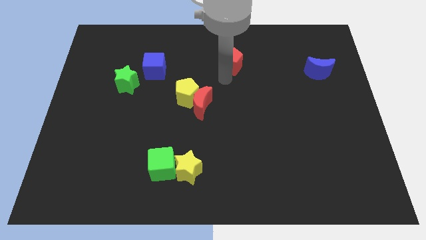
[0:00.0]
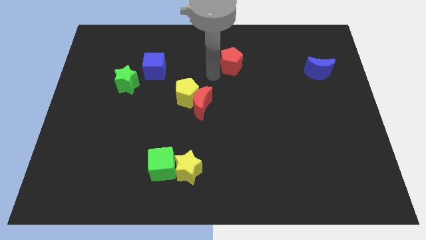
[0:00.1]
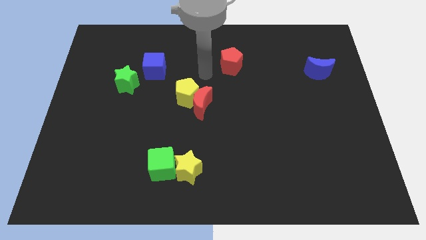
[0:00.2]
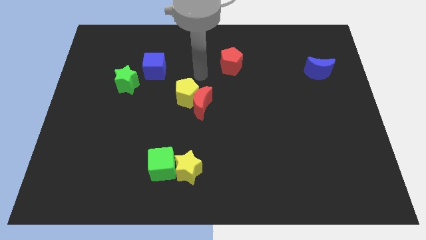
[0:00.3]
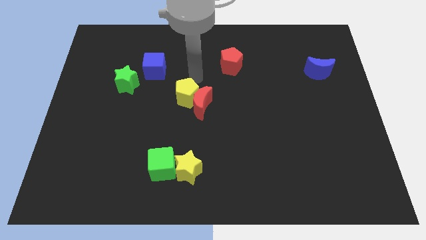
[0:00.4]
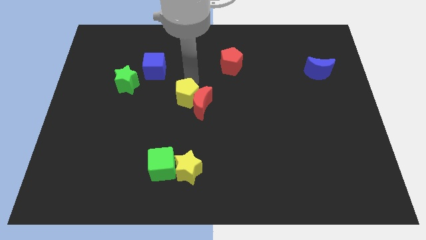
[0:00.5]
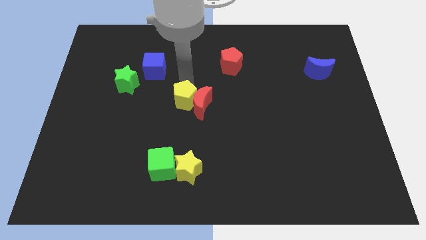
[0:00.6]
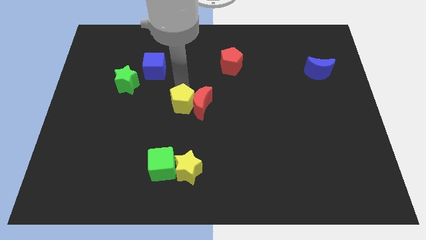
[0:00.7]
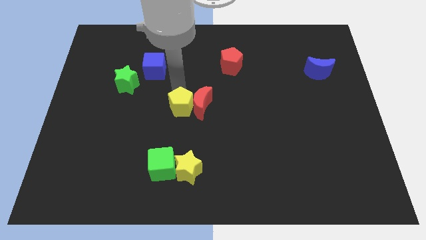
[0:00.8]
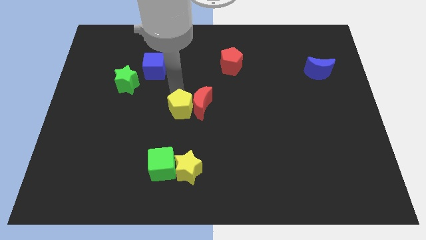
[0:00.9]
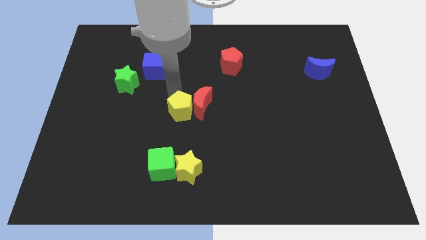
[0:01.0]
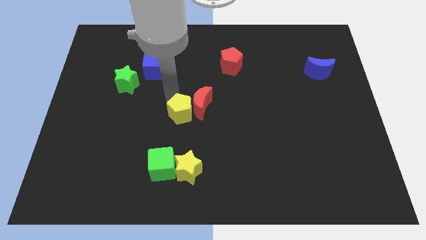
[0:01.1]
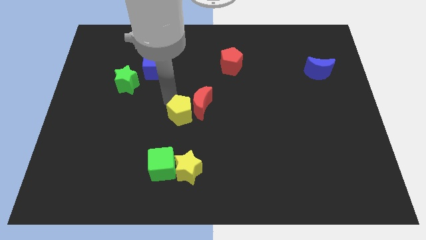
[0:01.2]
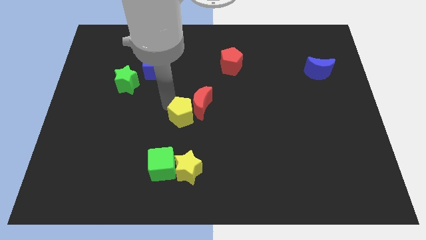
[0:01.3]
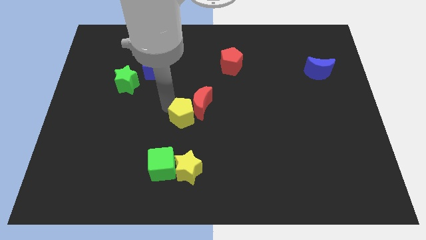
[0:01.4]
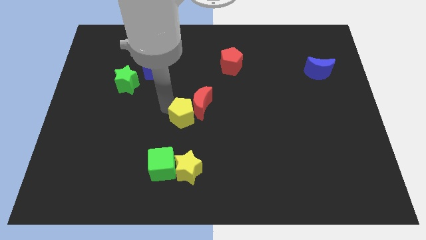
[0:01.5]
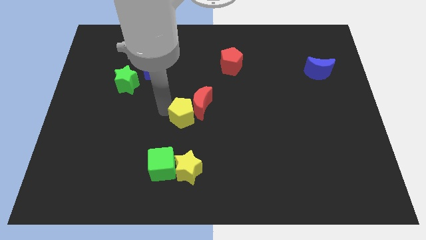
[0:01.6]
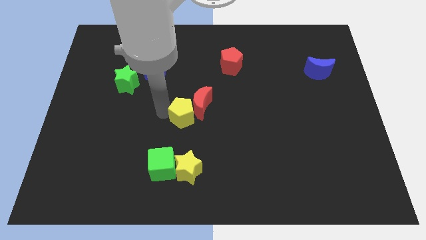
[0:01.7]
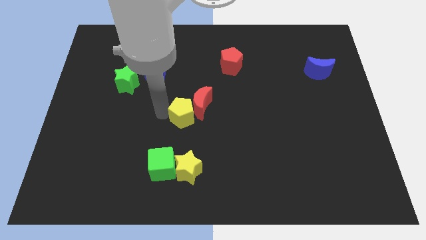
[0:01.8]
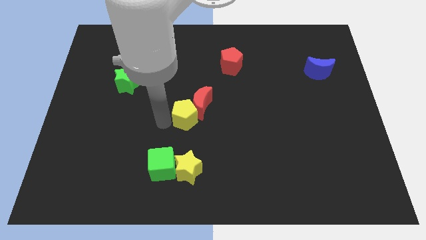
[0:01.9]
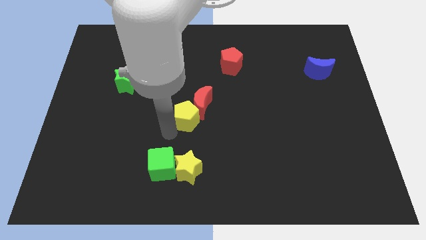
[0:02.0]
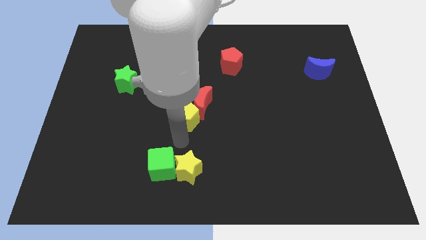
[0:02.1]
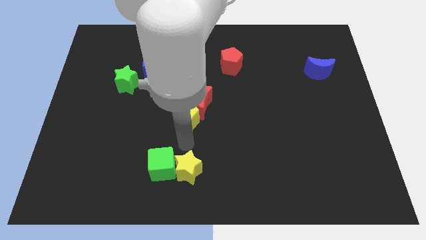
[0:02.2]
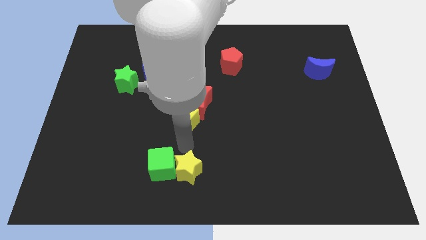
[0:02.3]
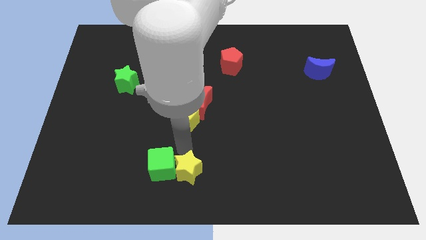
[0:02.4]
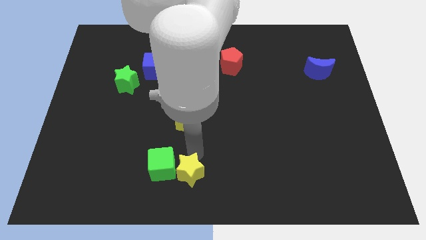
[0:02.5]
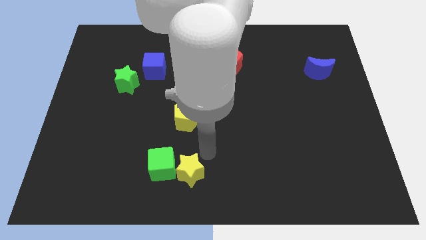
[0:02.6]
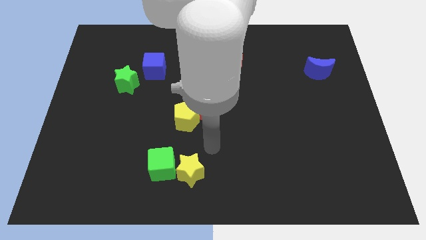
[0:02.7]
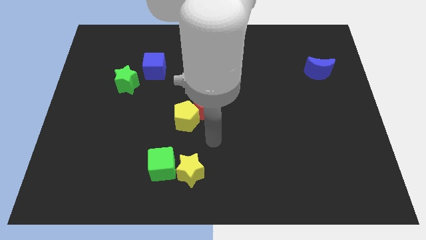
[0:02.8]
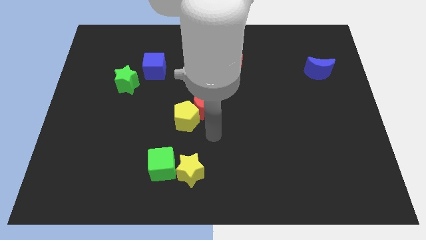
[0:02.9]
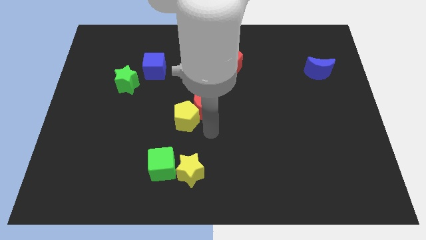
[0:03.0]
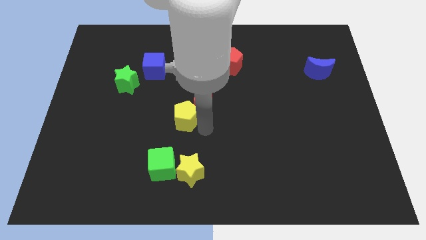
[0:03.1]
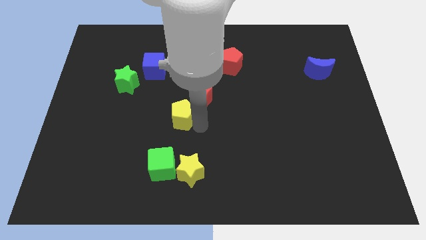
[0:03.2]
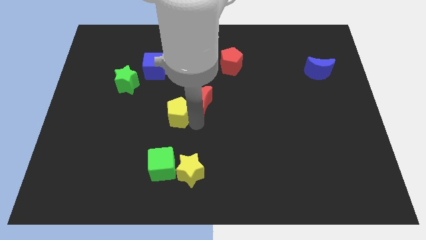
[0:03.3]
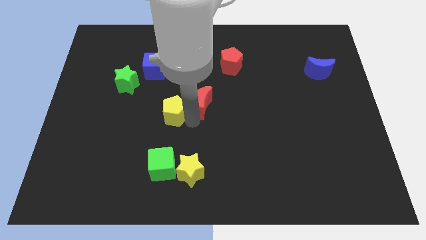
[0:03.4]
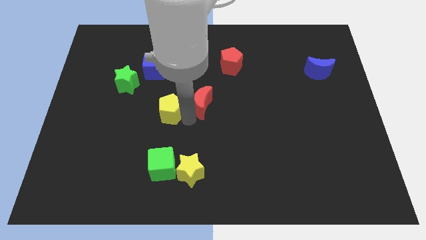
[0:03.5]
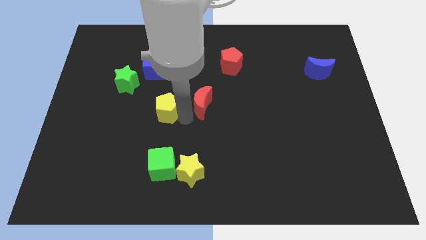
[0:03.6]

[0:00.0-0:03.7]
move the yellow pentagon to bottom left of red crescent

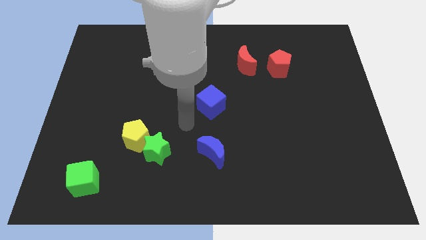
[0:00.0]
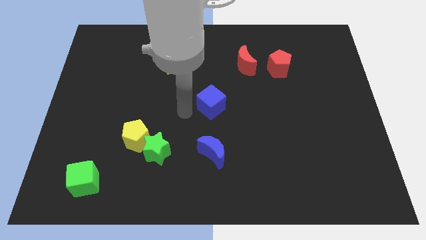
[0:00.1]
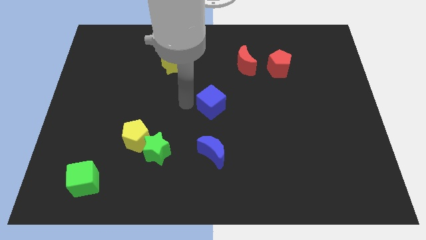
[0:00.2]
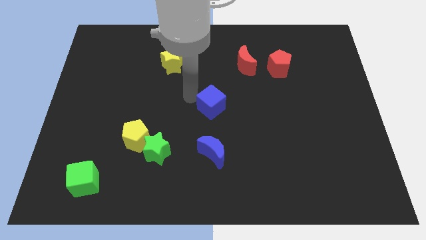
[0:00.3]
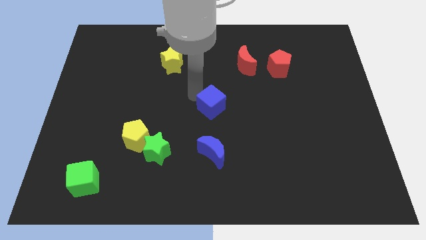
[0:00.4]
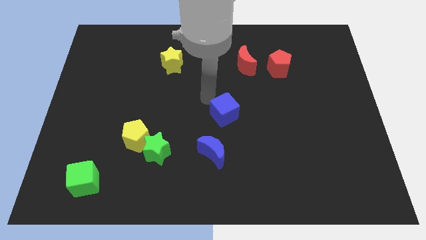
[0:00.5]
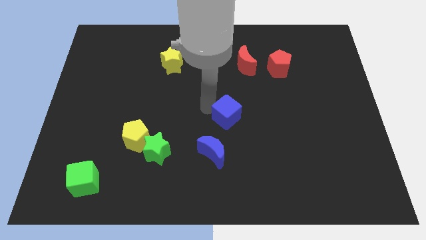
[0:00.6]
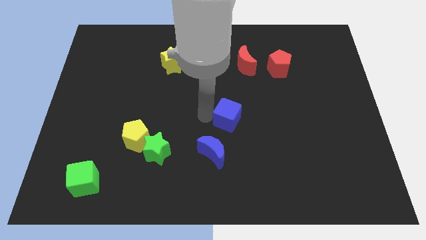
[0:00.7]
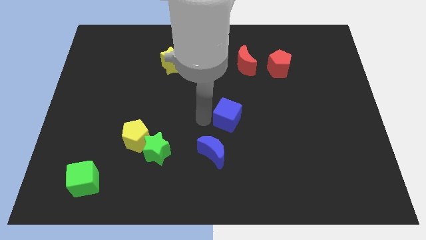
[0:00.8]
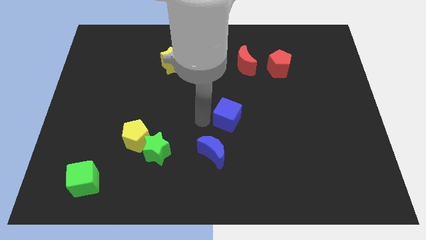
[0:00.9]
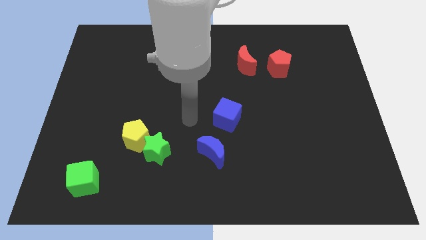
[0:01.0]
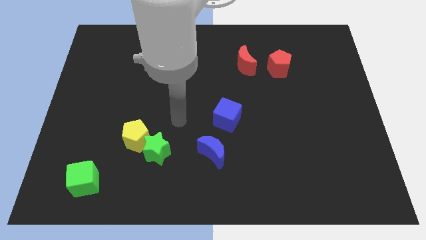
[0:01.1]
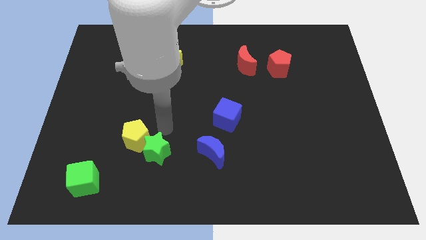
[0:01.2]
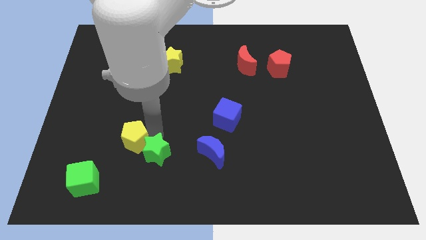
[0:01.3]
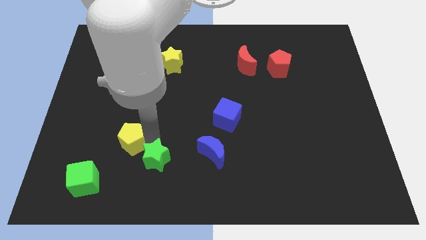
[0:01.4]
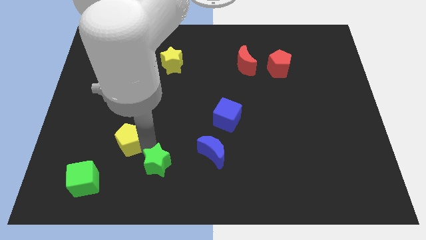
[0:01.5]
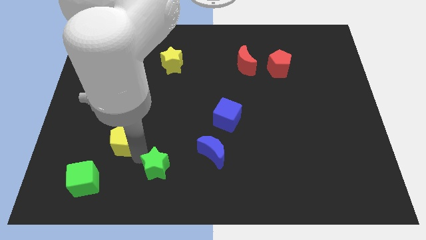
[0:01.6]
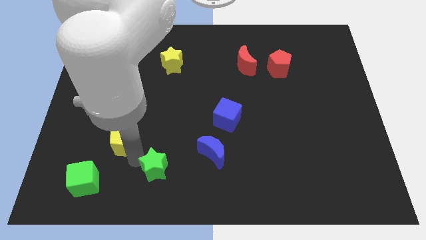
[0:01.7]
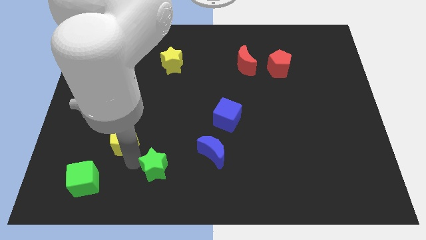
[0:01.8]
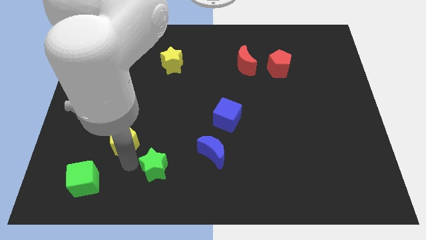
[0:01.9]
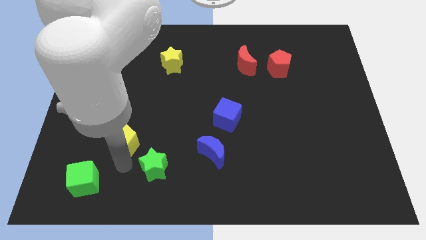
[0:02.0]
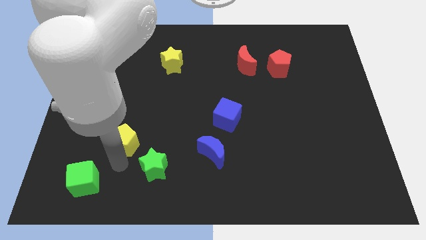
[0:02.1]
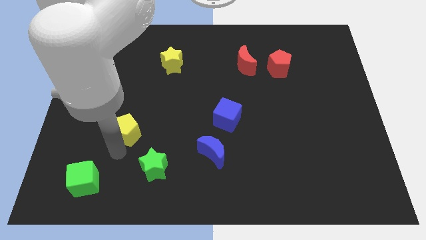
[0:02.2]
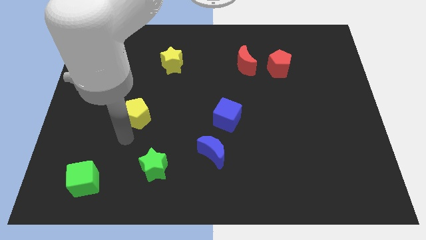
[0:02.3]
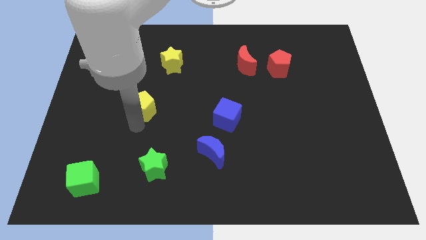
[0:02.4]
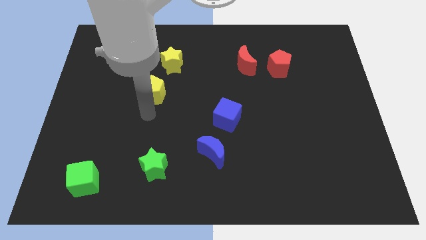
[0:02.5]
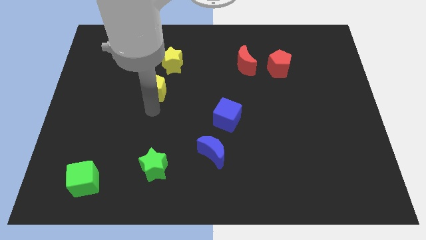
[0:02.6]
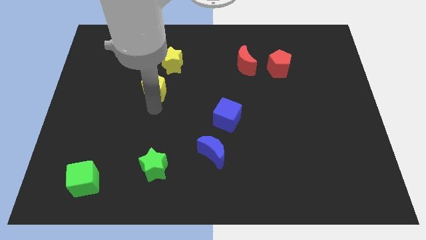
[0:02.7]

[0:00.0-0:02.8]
move the yellow pentagon diagonally bottom left to the yellow star

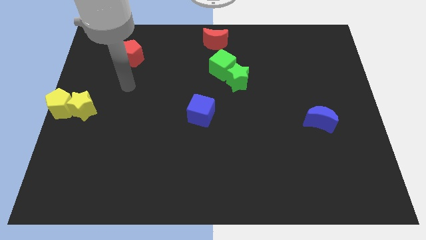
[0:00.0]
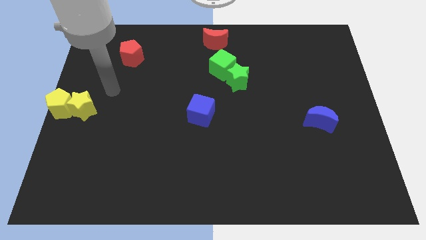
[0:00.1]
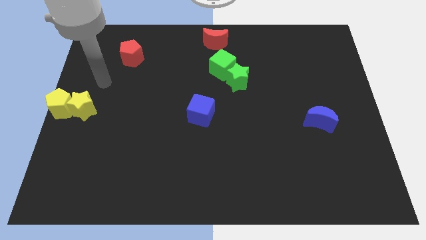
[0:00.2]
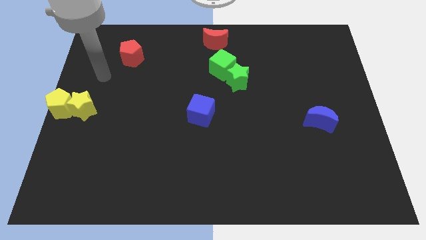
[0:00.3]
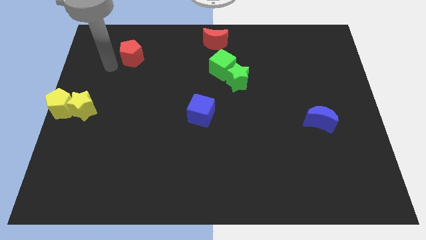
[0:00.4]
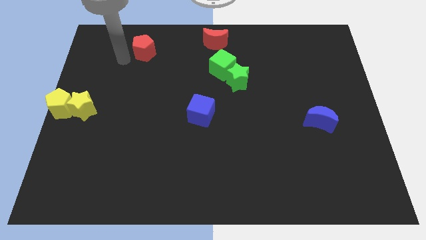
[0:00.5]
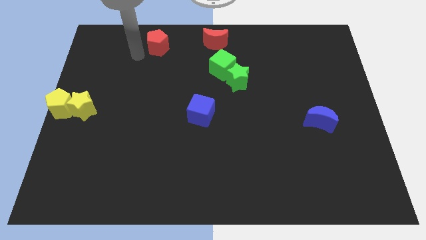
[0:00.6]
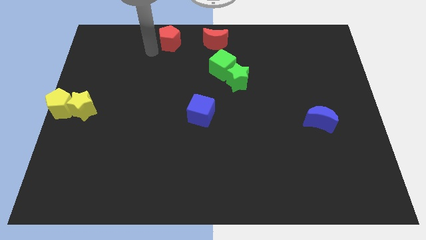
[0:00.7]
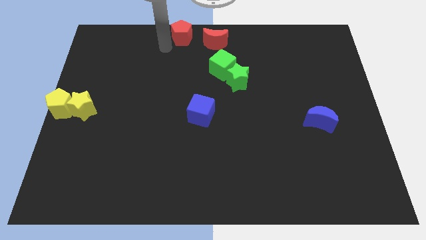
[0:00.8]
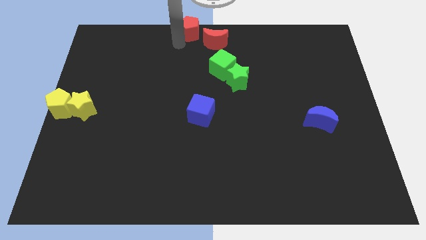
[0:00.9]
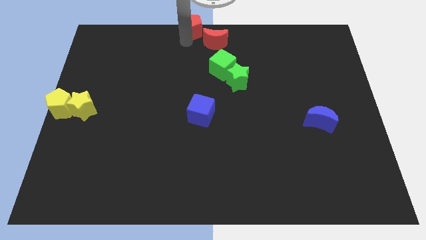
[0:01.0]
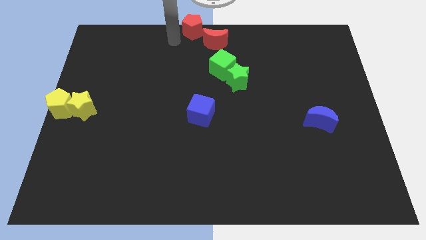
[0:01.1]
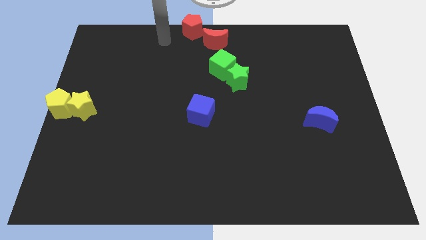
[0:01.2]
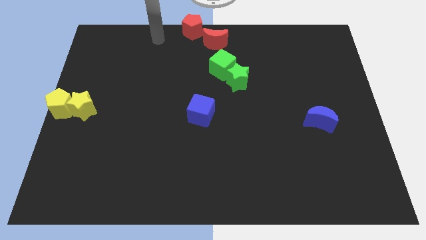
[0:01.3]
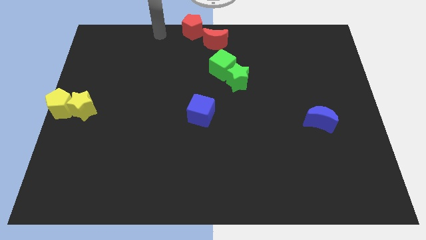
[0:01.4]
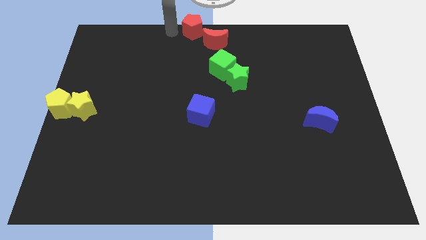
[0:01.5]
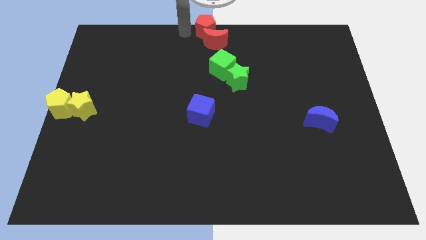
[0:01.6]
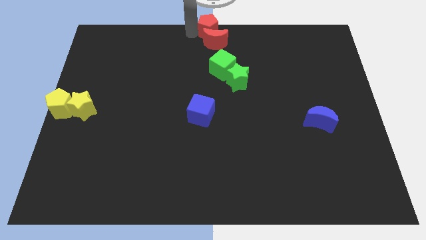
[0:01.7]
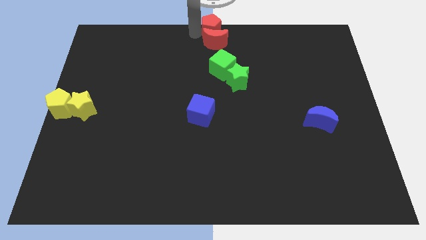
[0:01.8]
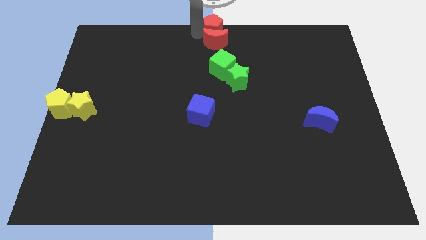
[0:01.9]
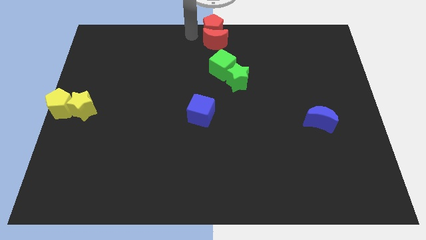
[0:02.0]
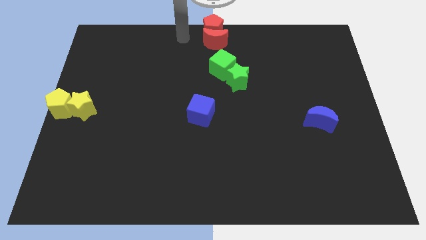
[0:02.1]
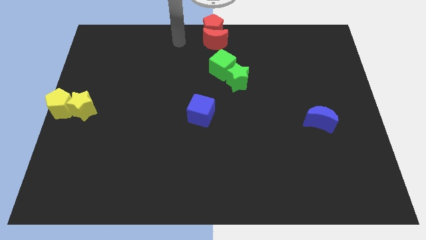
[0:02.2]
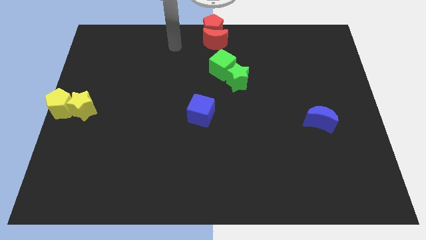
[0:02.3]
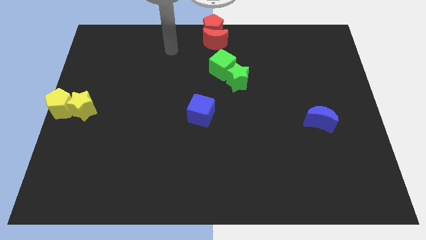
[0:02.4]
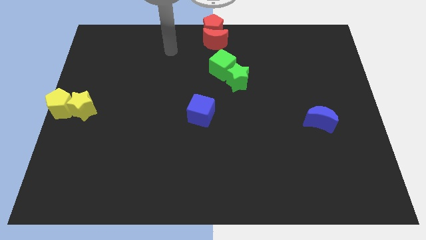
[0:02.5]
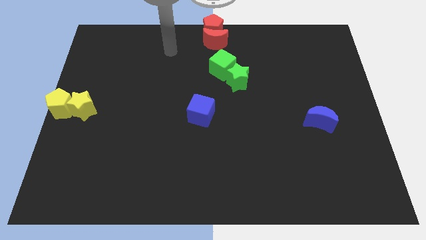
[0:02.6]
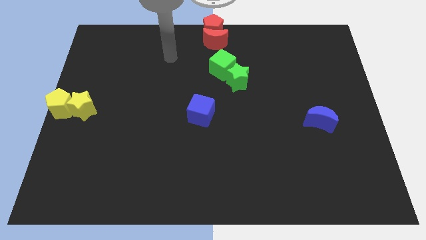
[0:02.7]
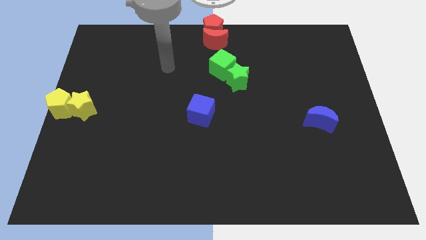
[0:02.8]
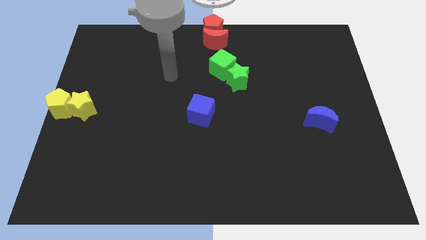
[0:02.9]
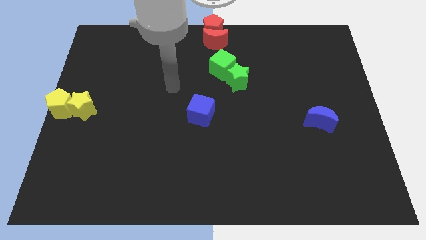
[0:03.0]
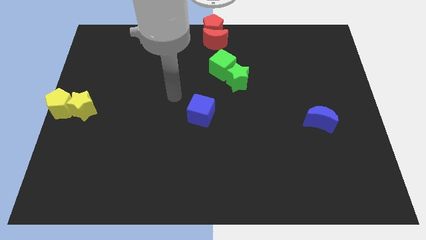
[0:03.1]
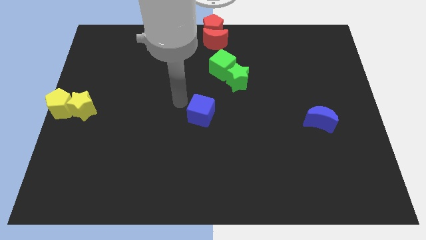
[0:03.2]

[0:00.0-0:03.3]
push the pentagon closer to the red crescent
